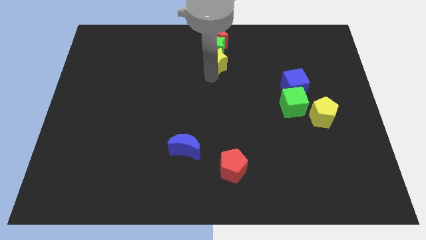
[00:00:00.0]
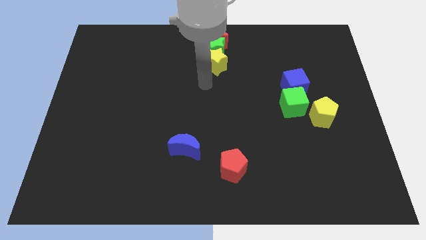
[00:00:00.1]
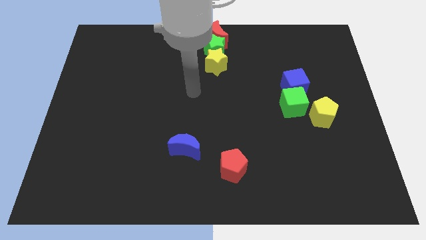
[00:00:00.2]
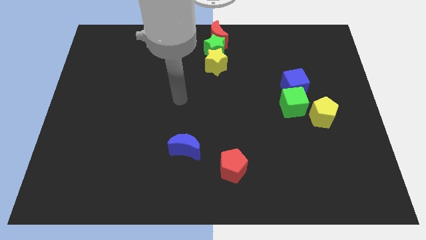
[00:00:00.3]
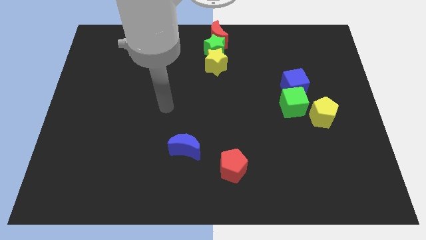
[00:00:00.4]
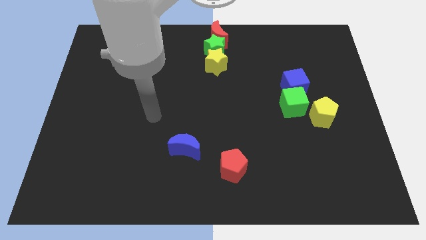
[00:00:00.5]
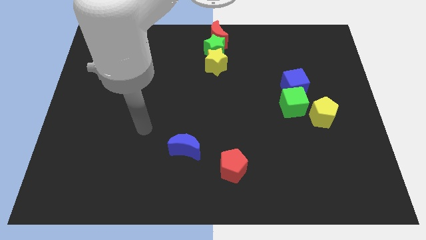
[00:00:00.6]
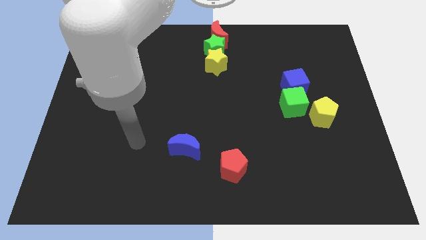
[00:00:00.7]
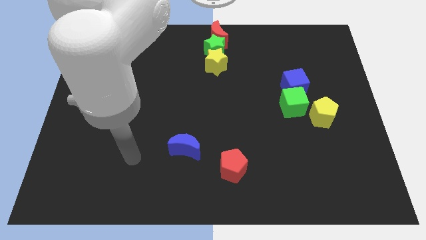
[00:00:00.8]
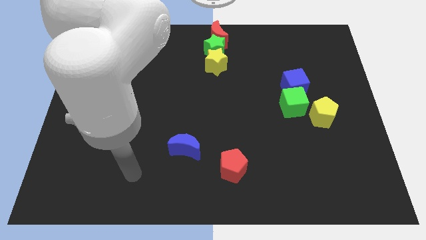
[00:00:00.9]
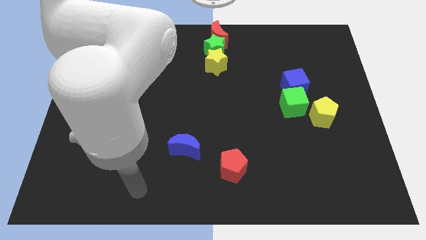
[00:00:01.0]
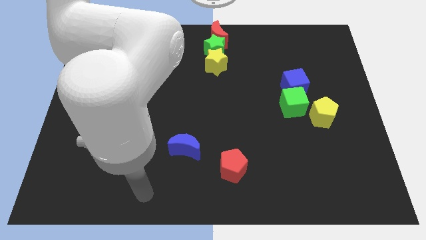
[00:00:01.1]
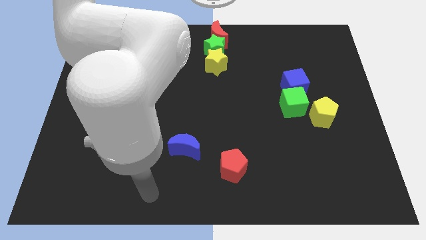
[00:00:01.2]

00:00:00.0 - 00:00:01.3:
move your arm away from yellow star

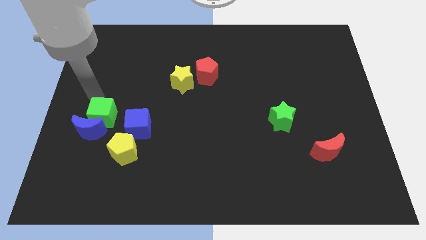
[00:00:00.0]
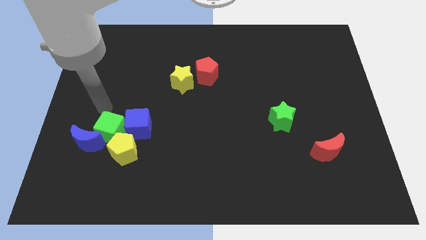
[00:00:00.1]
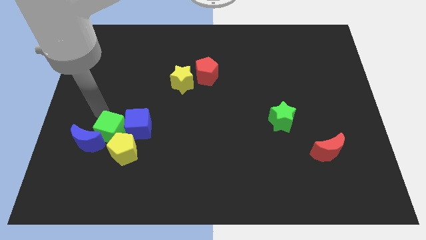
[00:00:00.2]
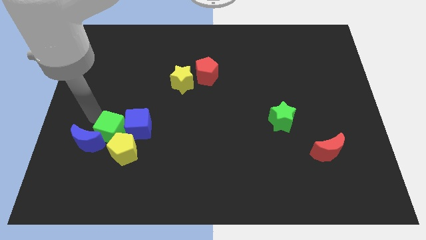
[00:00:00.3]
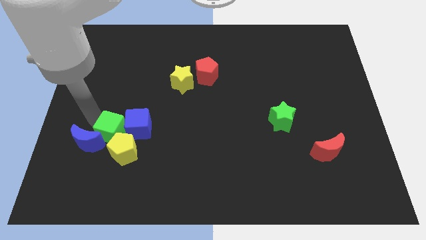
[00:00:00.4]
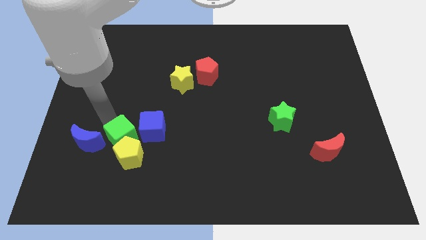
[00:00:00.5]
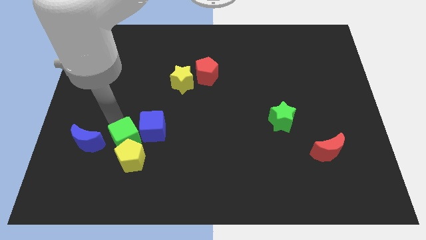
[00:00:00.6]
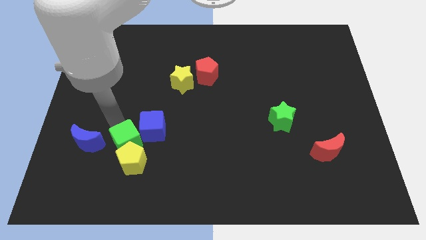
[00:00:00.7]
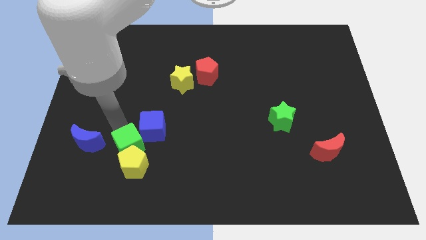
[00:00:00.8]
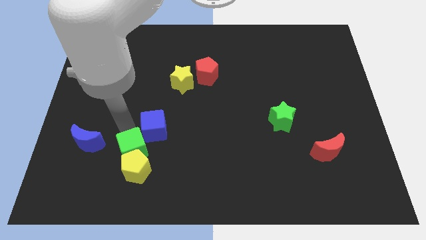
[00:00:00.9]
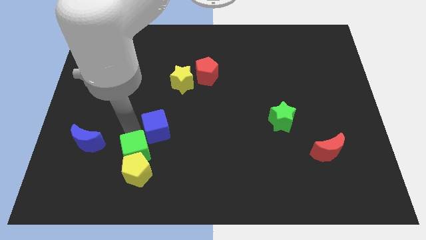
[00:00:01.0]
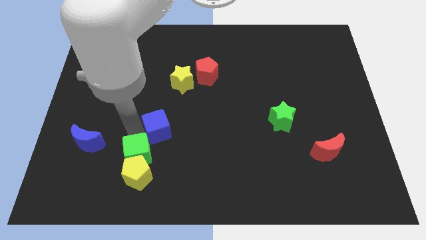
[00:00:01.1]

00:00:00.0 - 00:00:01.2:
push the green cube into the yellow pentagon

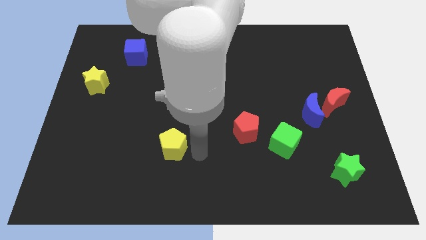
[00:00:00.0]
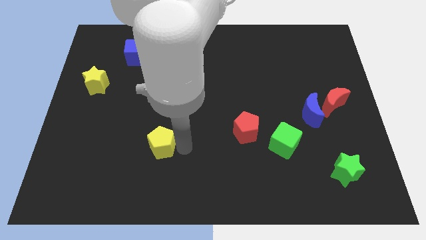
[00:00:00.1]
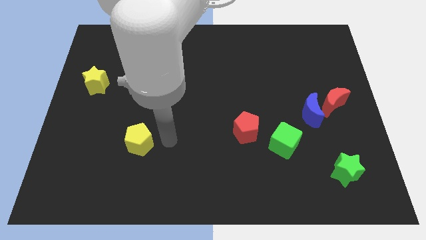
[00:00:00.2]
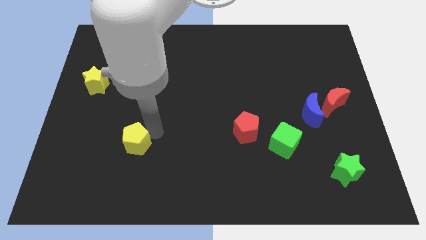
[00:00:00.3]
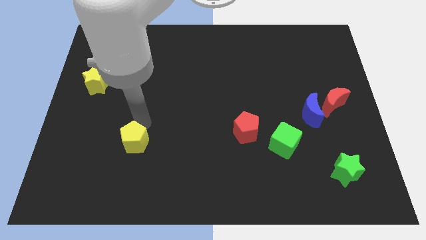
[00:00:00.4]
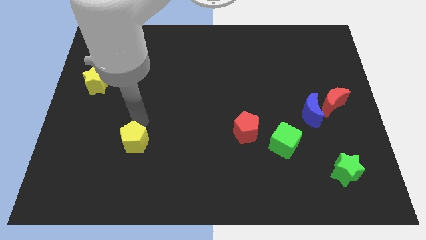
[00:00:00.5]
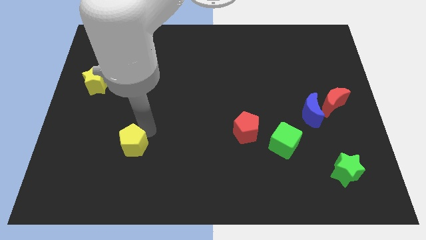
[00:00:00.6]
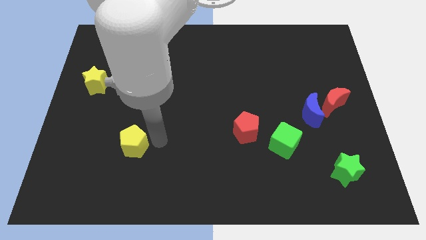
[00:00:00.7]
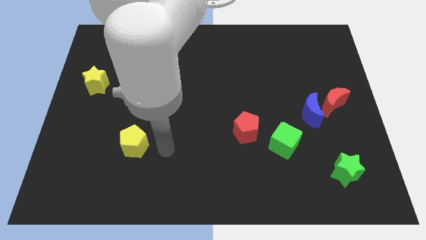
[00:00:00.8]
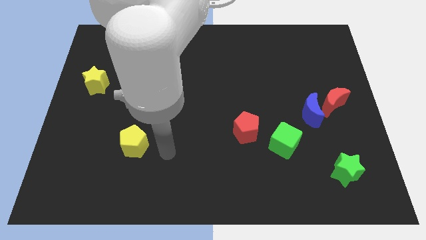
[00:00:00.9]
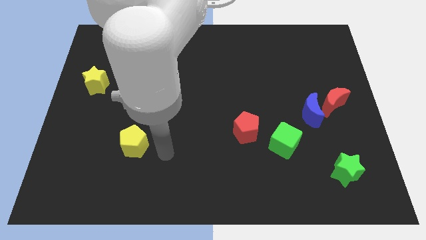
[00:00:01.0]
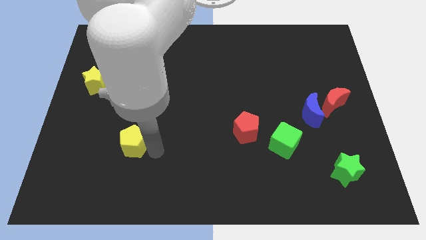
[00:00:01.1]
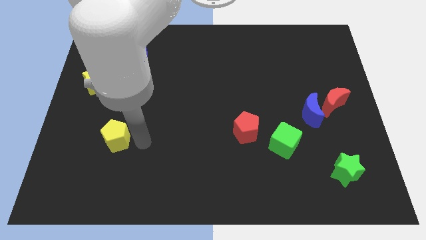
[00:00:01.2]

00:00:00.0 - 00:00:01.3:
move yellow pentagon to the left

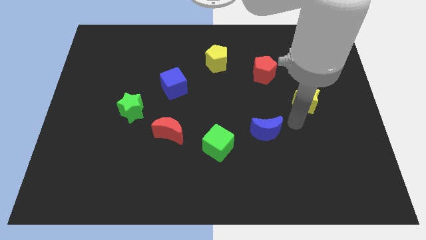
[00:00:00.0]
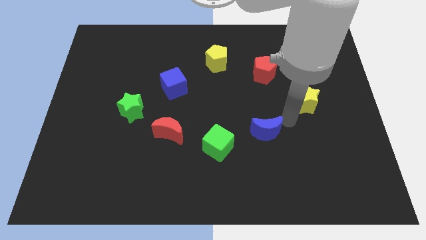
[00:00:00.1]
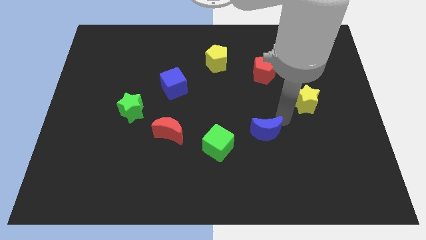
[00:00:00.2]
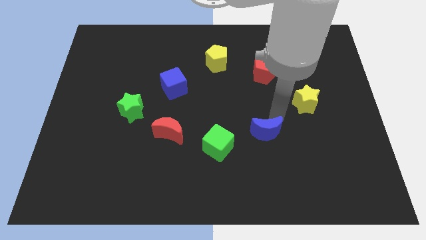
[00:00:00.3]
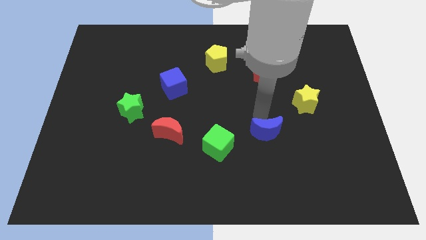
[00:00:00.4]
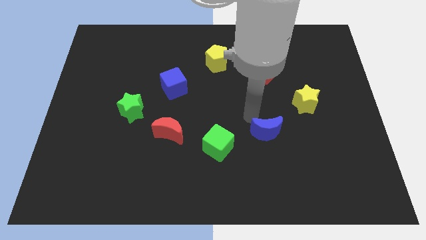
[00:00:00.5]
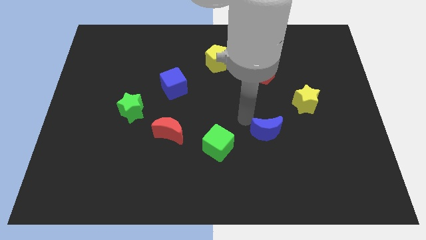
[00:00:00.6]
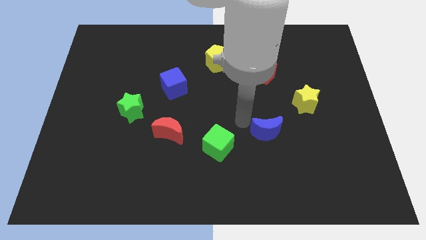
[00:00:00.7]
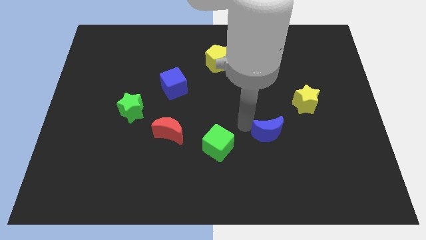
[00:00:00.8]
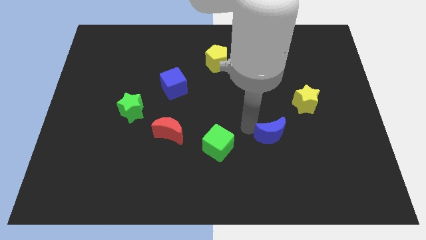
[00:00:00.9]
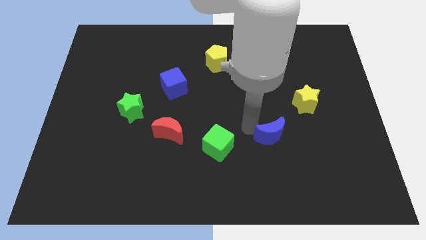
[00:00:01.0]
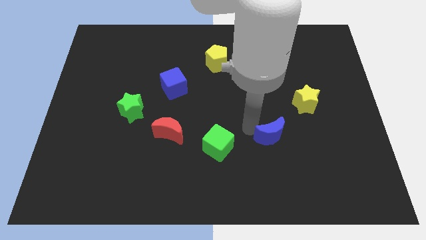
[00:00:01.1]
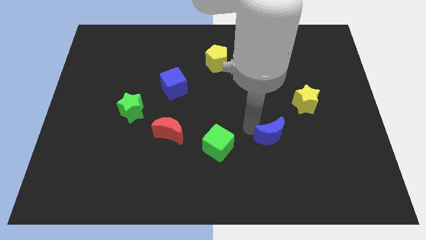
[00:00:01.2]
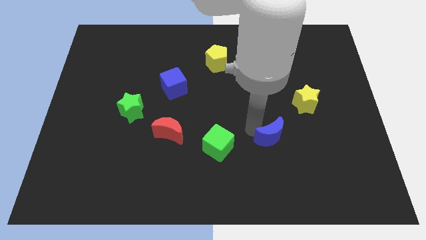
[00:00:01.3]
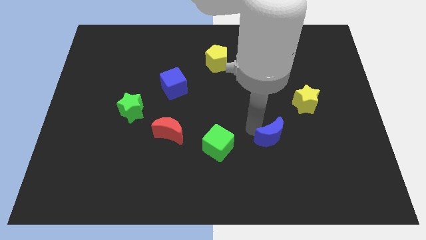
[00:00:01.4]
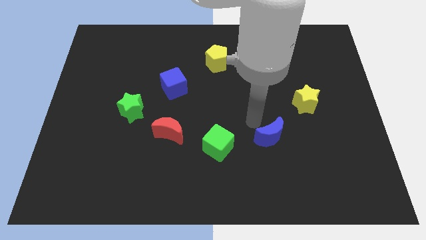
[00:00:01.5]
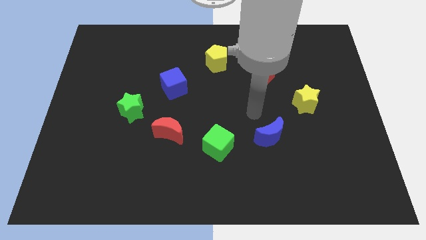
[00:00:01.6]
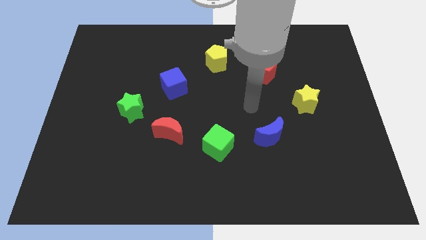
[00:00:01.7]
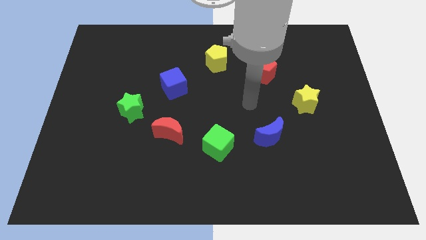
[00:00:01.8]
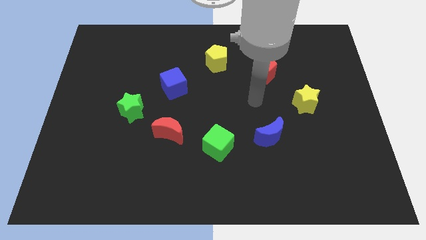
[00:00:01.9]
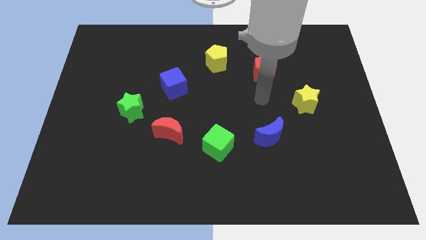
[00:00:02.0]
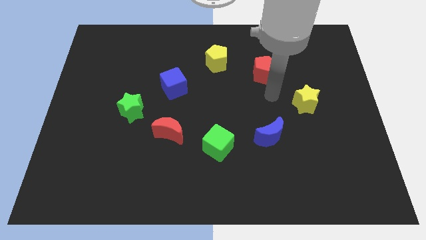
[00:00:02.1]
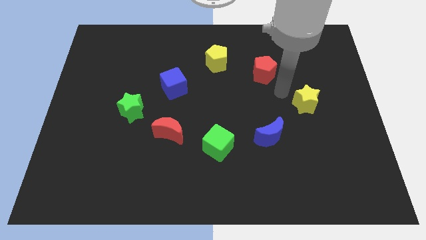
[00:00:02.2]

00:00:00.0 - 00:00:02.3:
place the blue crescent diagonal to the yellow pentagon

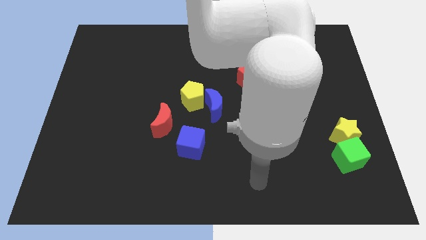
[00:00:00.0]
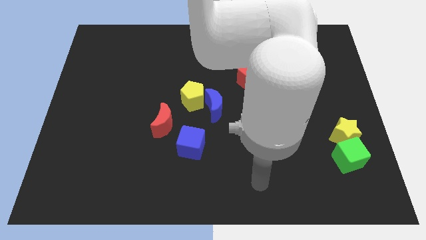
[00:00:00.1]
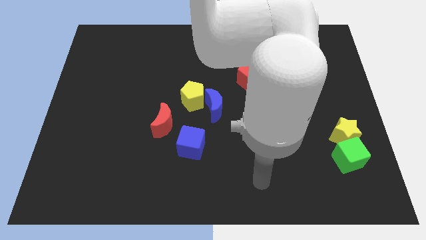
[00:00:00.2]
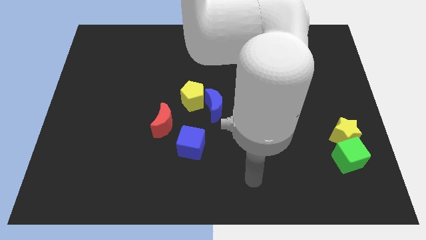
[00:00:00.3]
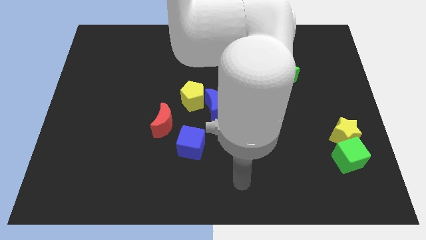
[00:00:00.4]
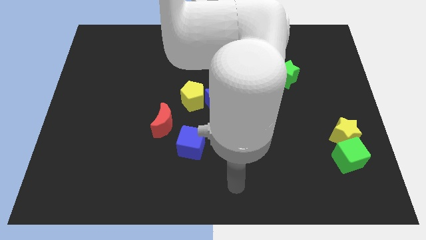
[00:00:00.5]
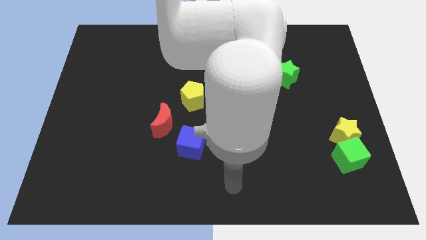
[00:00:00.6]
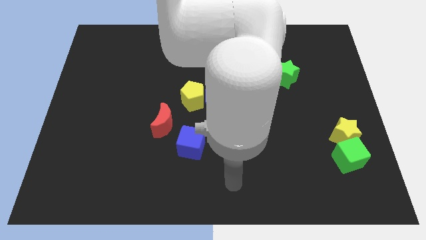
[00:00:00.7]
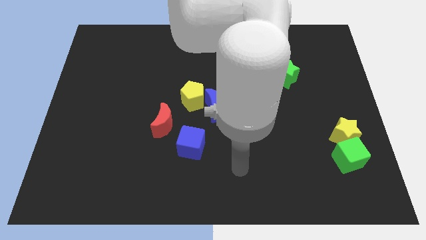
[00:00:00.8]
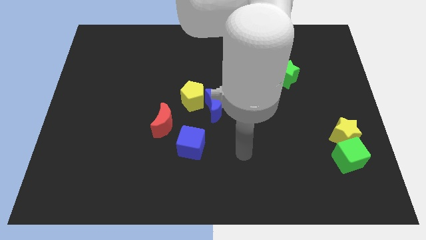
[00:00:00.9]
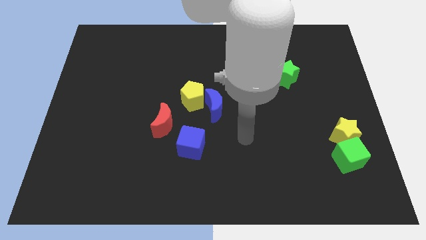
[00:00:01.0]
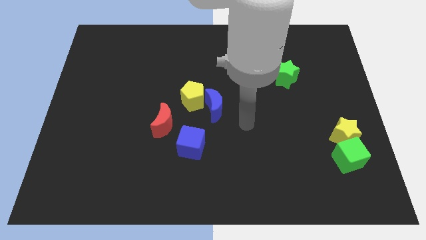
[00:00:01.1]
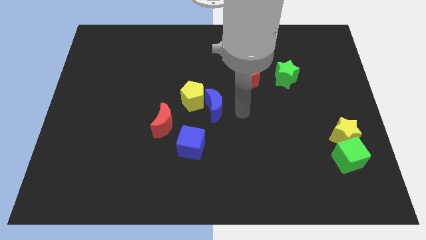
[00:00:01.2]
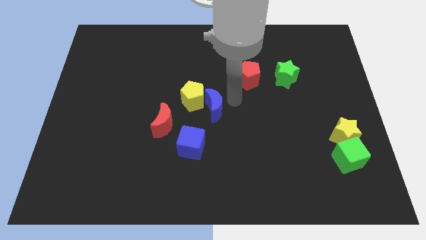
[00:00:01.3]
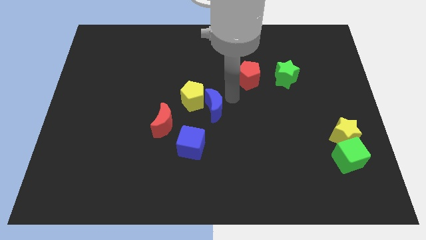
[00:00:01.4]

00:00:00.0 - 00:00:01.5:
move your arm towards the blue crescent

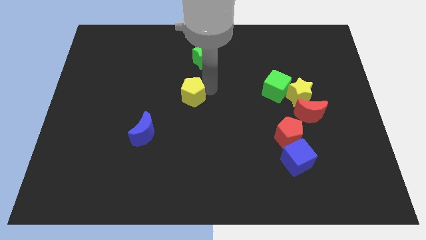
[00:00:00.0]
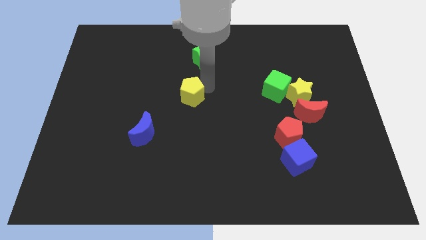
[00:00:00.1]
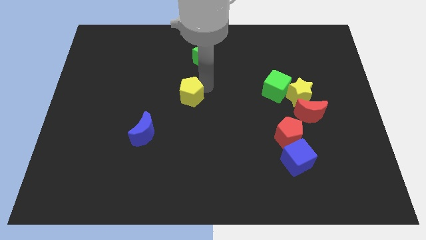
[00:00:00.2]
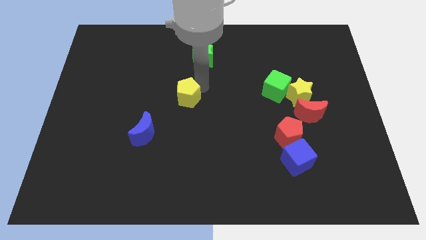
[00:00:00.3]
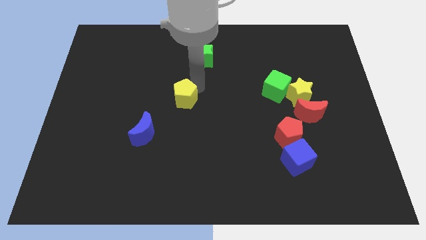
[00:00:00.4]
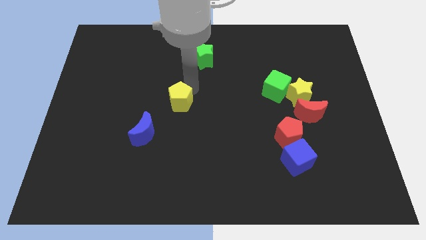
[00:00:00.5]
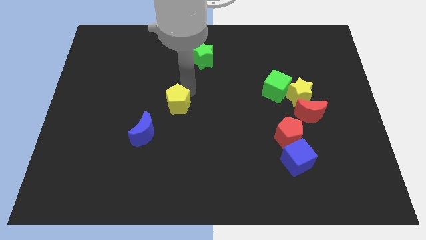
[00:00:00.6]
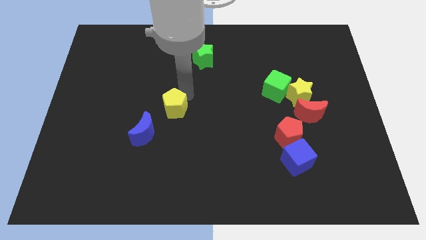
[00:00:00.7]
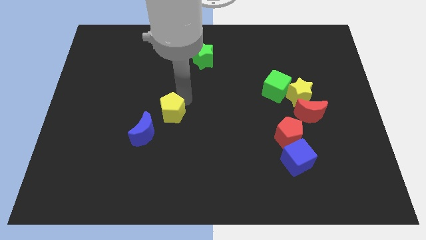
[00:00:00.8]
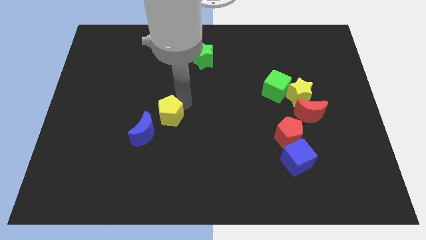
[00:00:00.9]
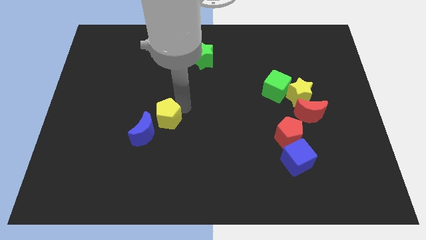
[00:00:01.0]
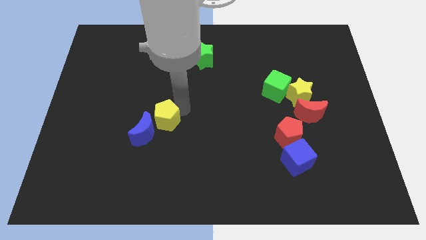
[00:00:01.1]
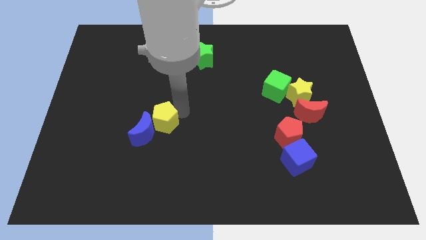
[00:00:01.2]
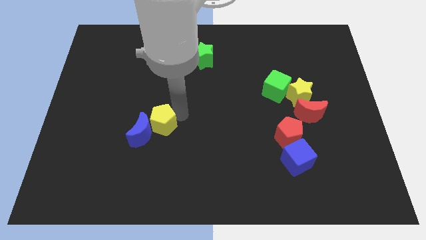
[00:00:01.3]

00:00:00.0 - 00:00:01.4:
push the yellow pentagon diagonally on the right of the blue crescent
